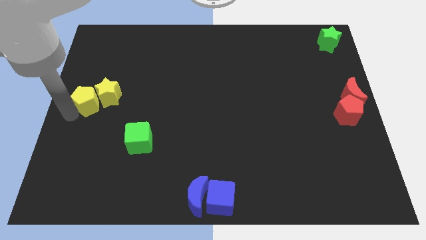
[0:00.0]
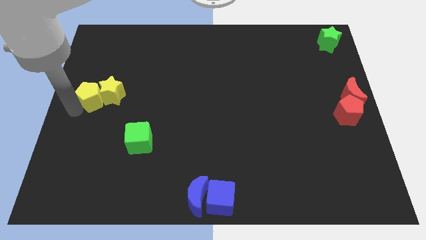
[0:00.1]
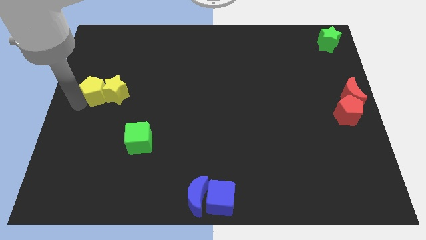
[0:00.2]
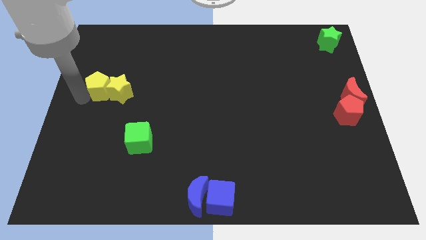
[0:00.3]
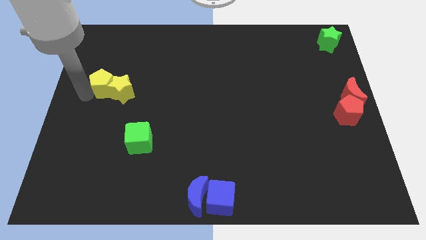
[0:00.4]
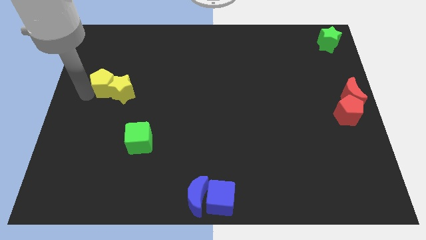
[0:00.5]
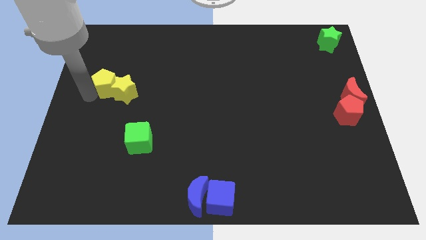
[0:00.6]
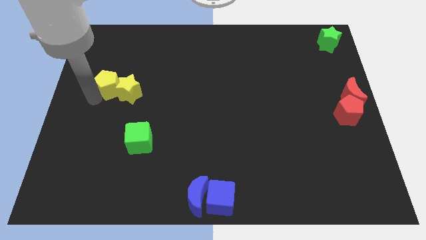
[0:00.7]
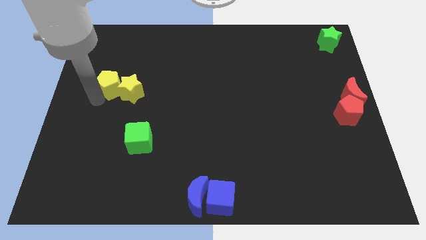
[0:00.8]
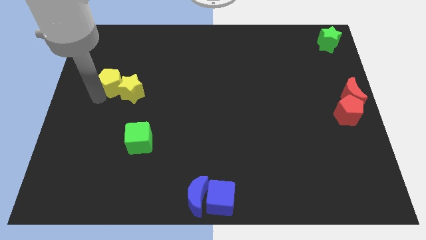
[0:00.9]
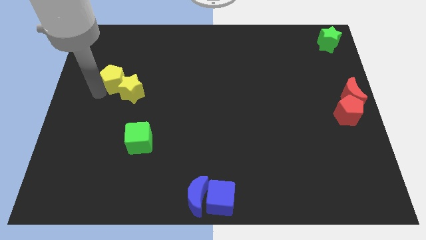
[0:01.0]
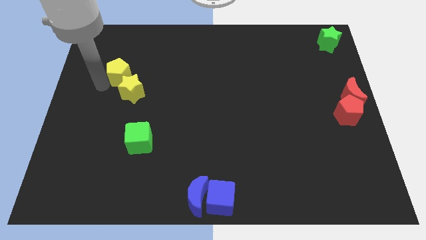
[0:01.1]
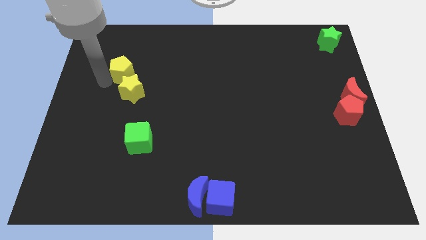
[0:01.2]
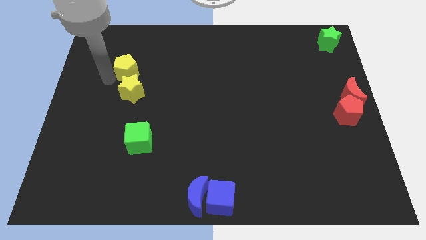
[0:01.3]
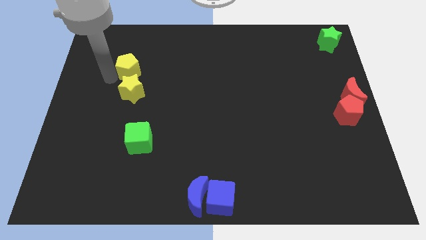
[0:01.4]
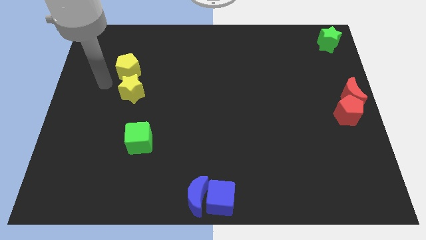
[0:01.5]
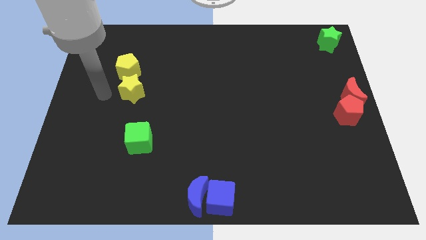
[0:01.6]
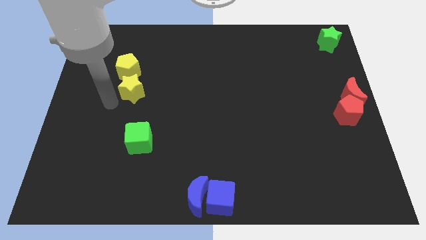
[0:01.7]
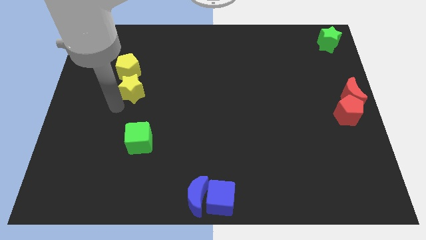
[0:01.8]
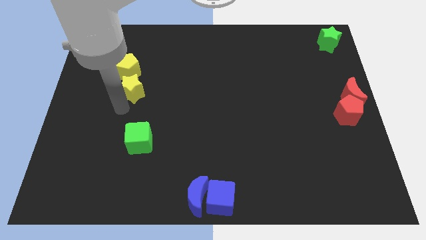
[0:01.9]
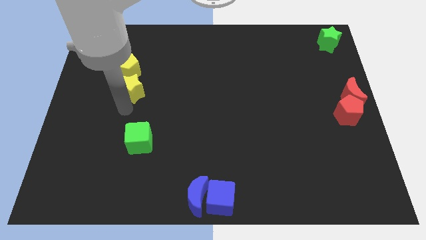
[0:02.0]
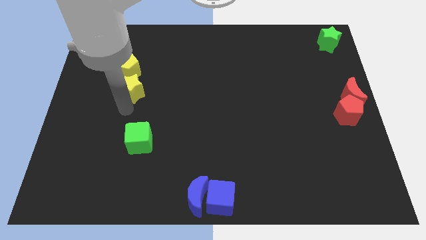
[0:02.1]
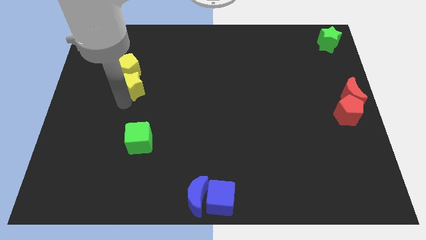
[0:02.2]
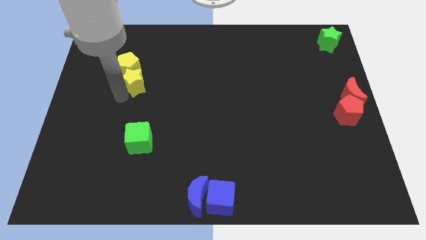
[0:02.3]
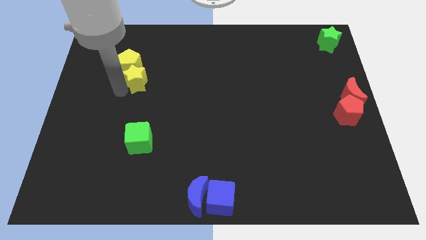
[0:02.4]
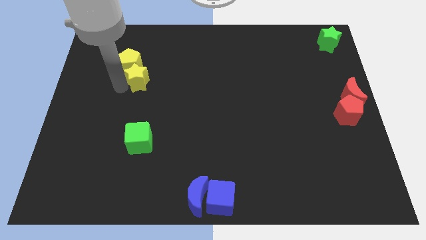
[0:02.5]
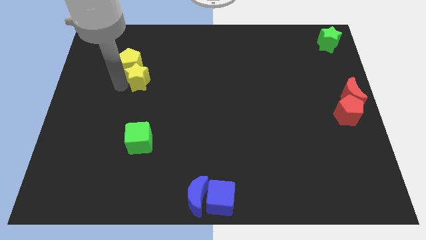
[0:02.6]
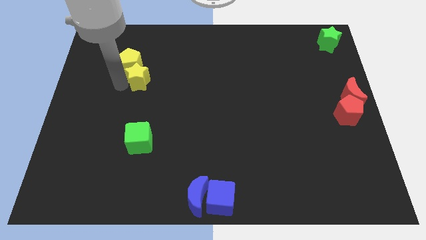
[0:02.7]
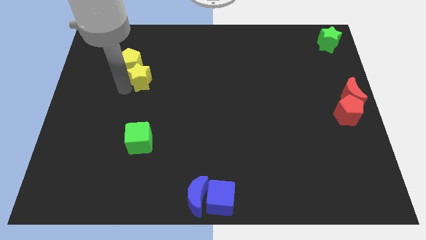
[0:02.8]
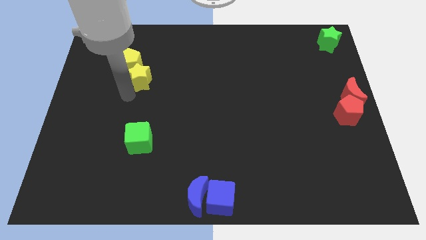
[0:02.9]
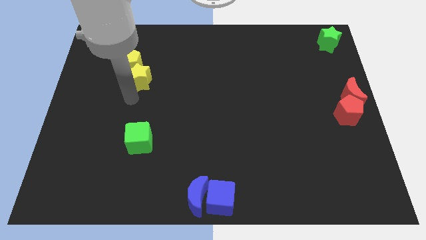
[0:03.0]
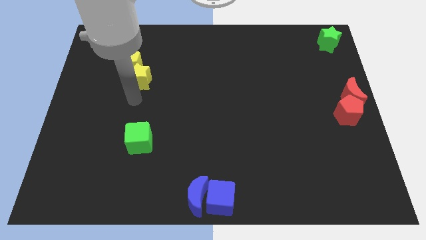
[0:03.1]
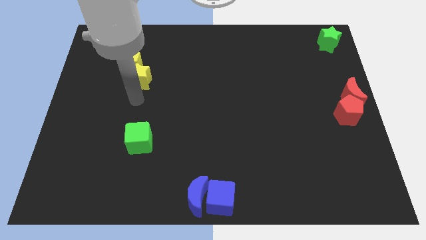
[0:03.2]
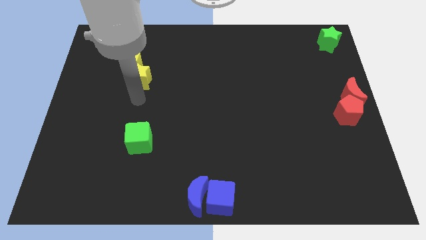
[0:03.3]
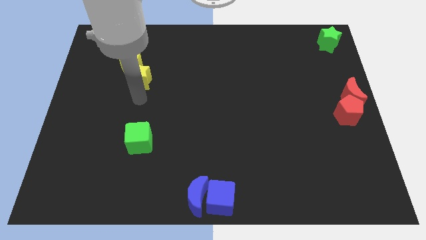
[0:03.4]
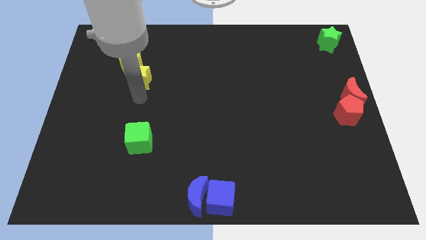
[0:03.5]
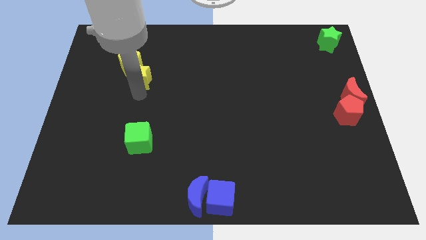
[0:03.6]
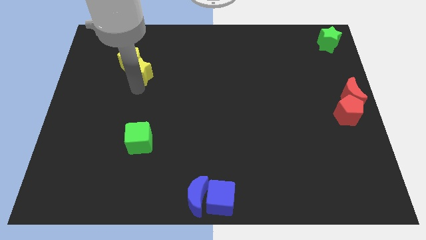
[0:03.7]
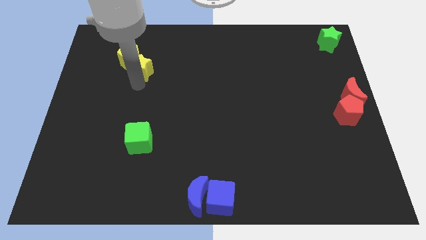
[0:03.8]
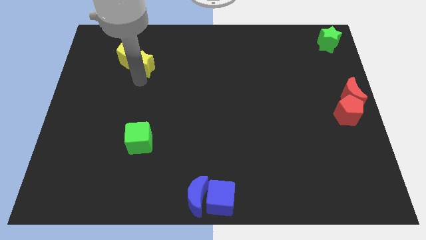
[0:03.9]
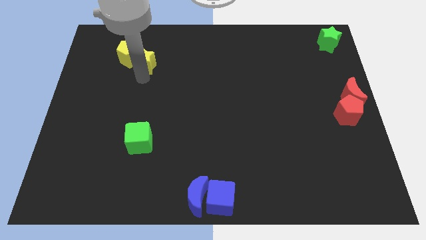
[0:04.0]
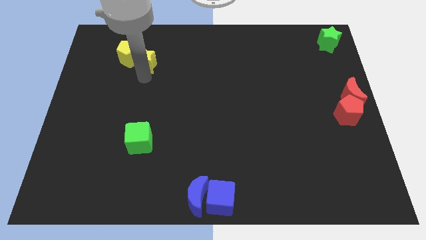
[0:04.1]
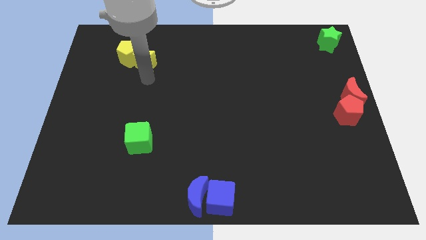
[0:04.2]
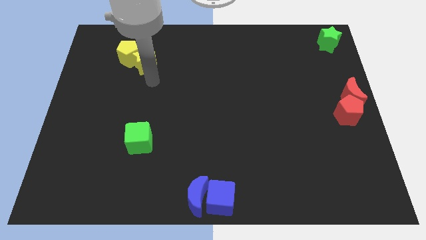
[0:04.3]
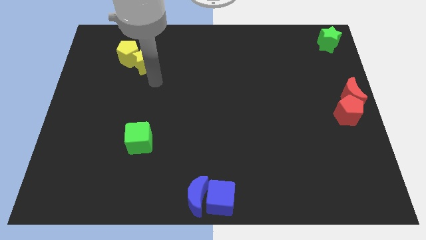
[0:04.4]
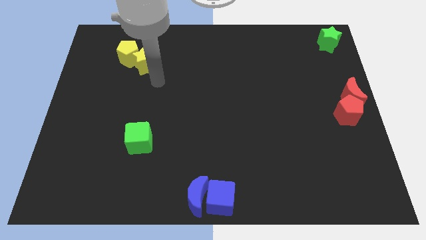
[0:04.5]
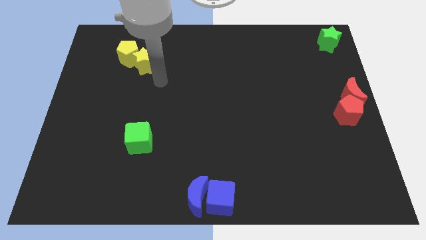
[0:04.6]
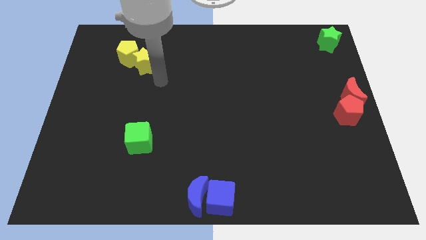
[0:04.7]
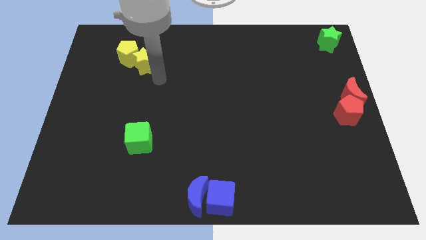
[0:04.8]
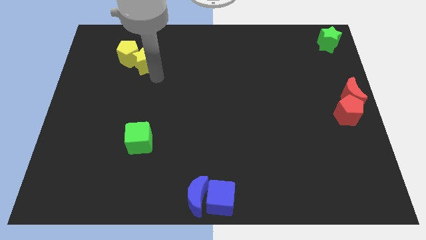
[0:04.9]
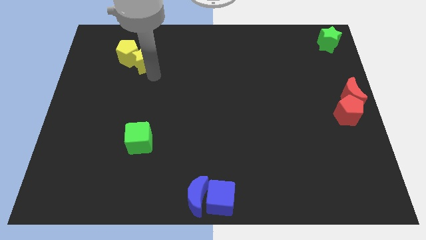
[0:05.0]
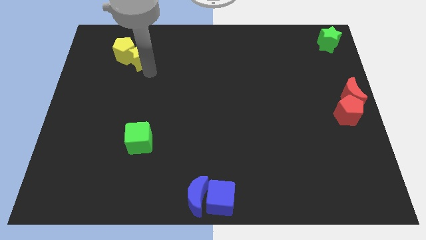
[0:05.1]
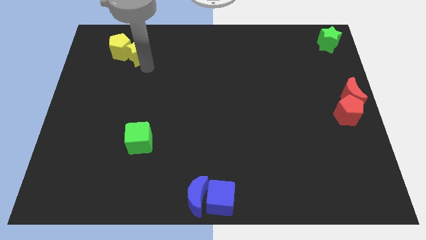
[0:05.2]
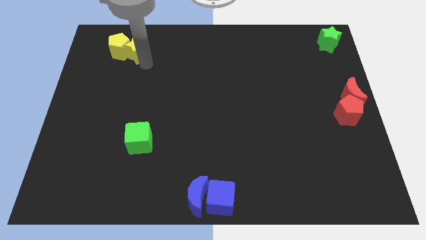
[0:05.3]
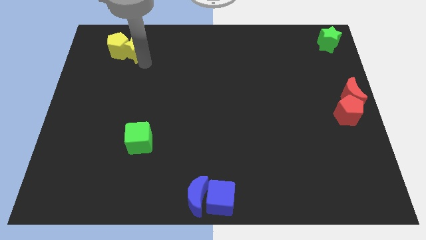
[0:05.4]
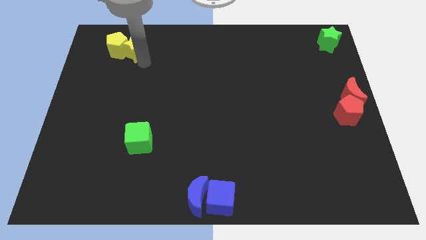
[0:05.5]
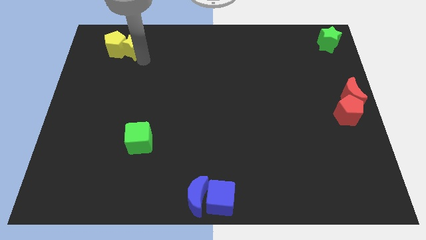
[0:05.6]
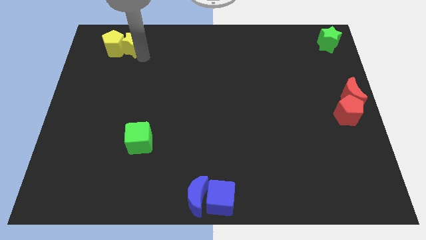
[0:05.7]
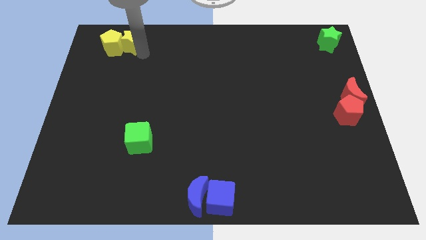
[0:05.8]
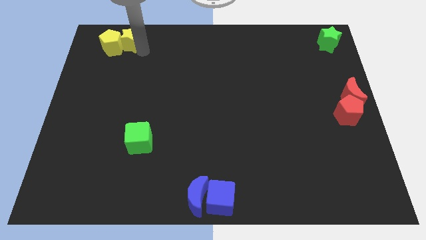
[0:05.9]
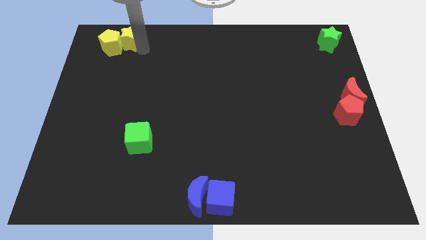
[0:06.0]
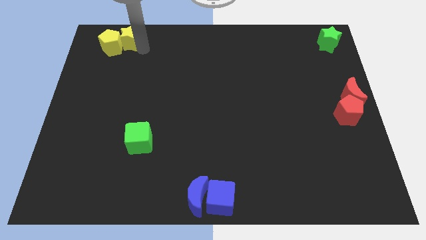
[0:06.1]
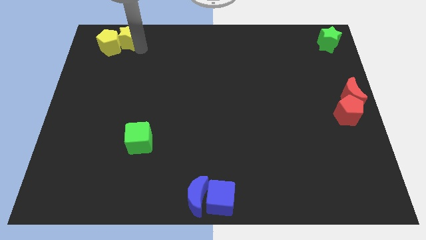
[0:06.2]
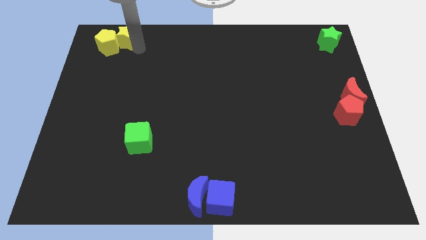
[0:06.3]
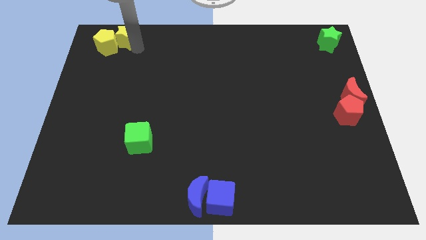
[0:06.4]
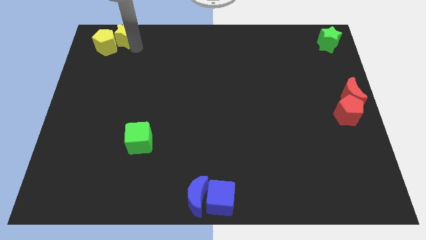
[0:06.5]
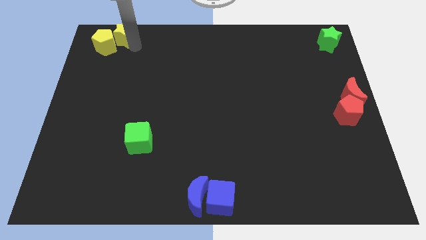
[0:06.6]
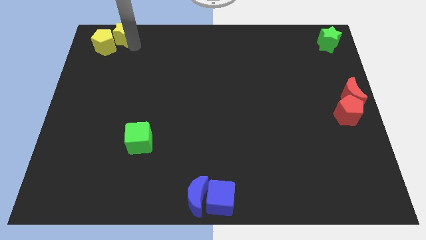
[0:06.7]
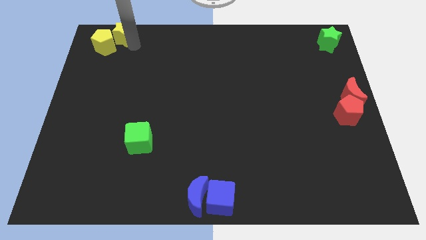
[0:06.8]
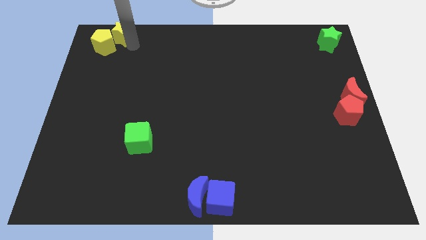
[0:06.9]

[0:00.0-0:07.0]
move yellow star towards top left

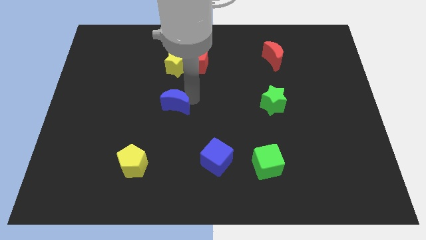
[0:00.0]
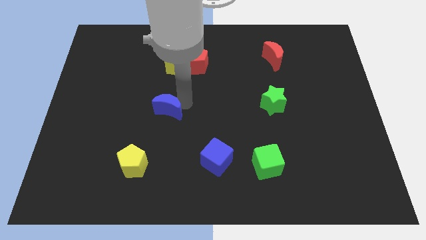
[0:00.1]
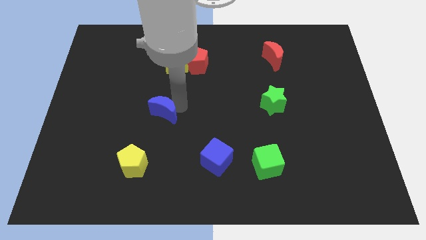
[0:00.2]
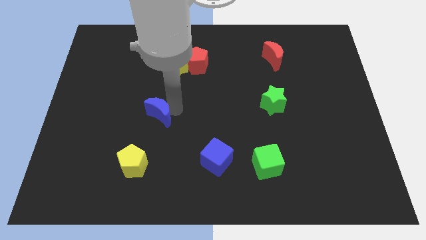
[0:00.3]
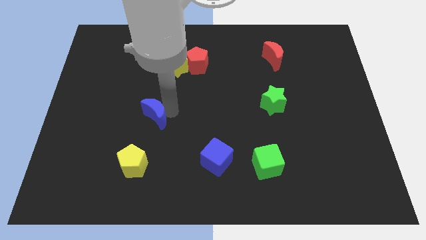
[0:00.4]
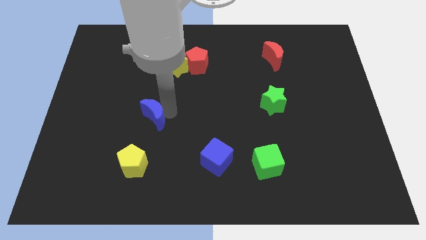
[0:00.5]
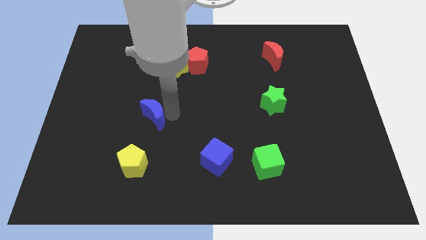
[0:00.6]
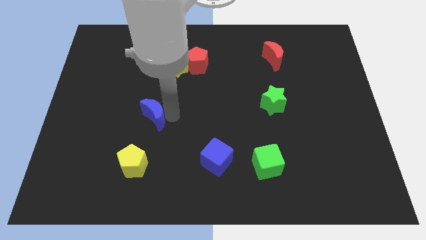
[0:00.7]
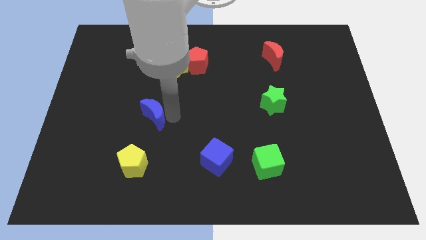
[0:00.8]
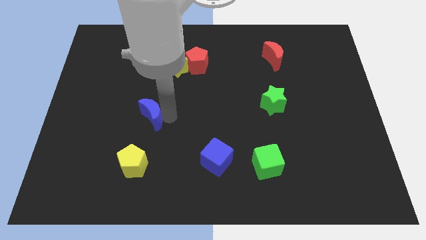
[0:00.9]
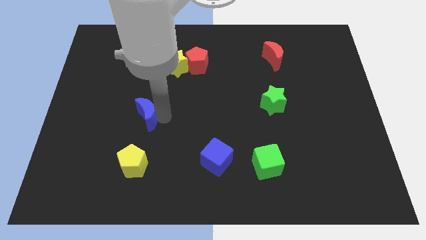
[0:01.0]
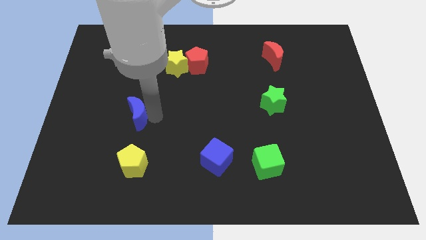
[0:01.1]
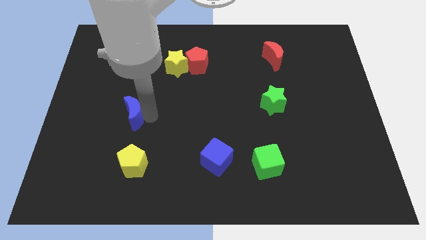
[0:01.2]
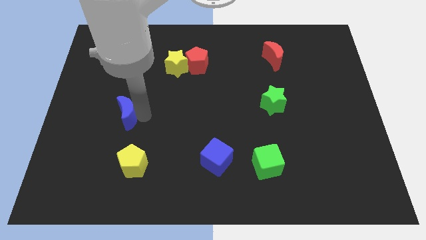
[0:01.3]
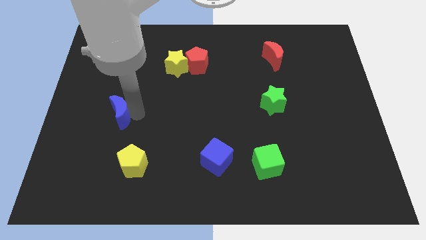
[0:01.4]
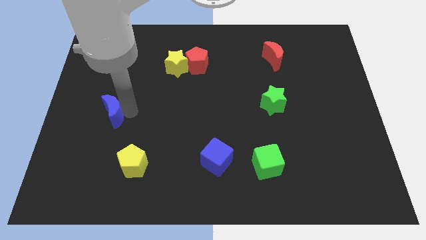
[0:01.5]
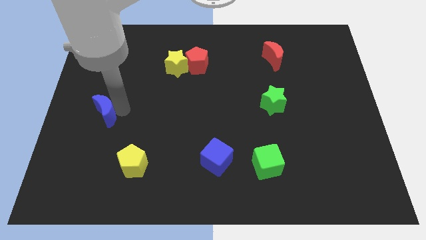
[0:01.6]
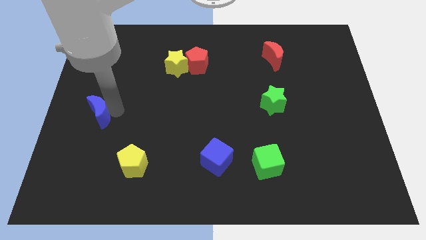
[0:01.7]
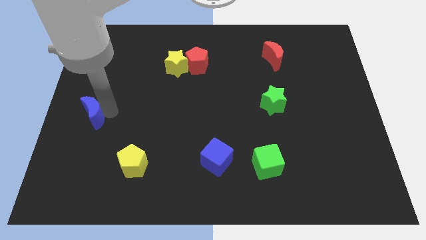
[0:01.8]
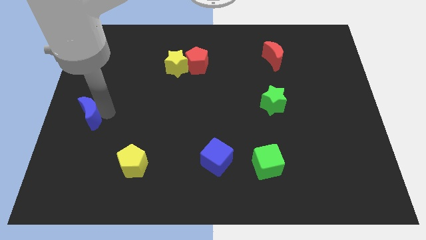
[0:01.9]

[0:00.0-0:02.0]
slide the blue moon to the left

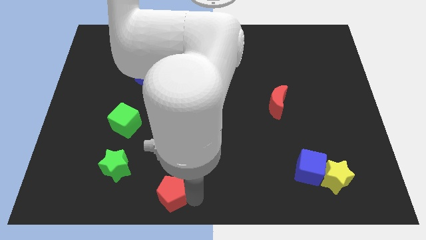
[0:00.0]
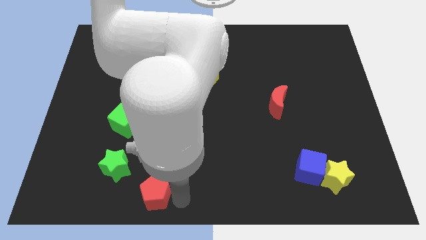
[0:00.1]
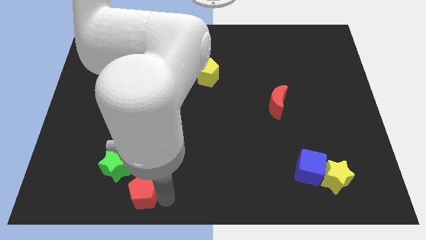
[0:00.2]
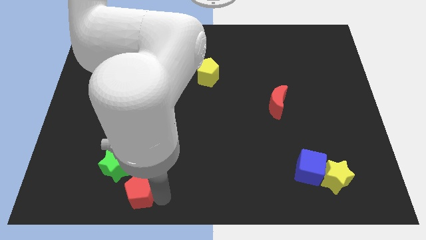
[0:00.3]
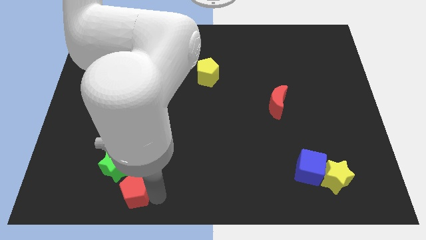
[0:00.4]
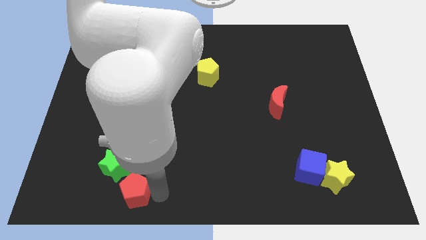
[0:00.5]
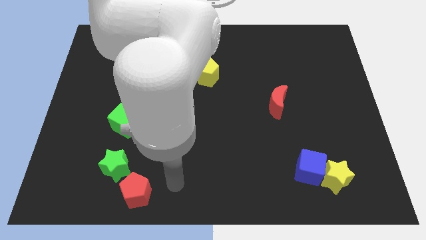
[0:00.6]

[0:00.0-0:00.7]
place the red pentagon below the green star
